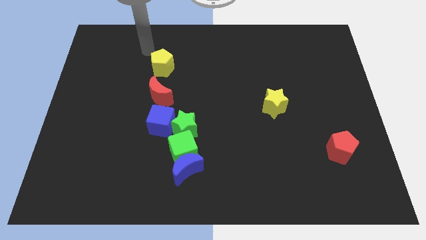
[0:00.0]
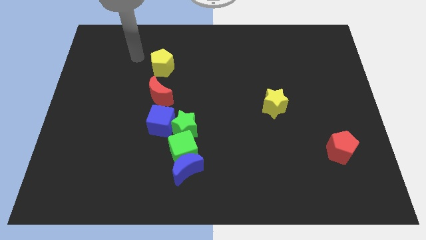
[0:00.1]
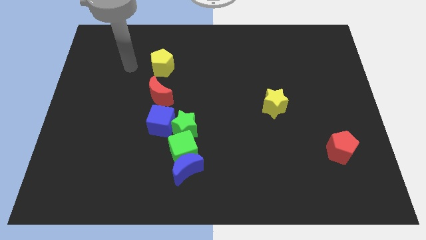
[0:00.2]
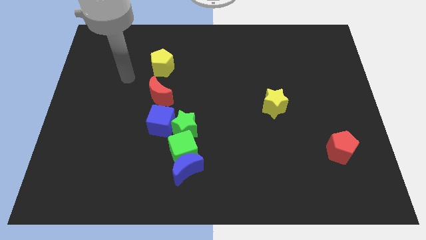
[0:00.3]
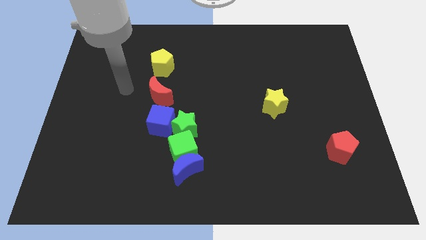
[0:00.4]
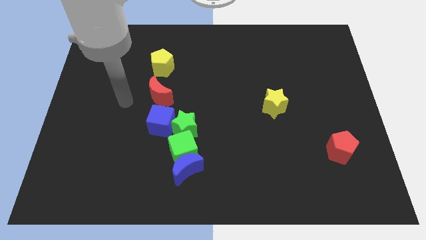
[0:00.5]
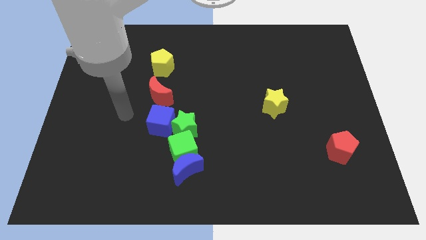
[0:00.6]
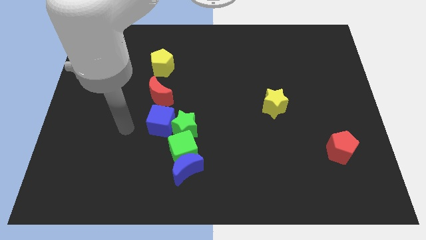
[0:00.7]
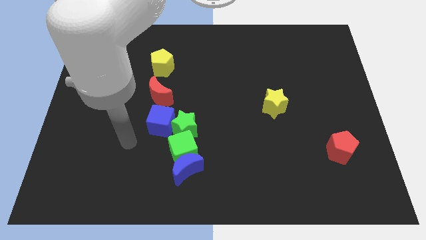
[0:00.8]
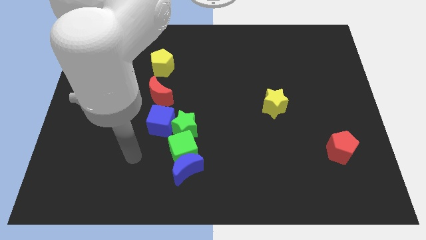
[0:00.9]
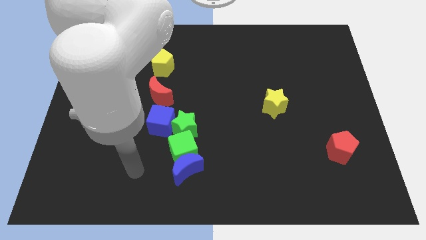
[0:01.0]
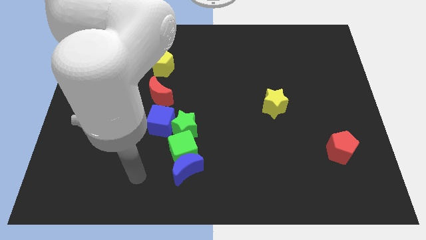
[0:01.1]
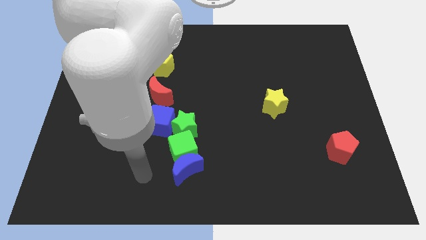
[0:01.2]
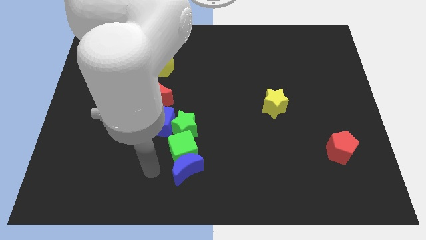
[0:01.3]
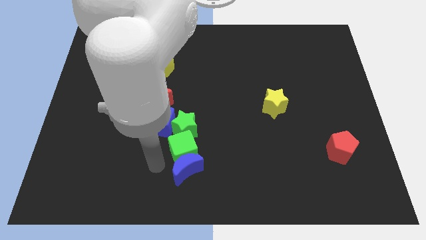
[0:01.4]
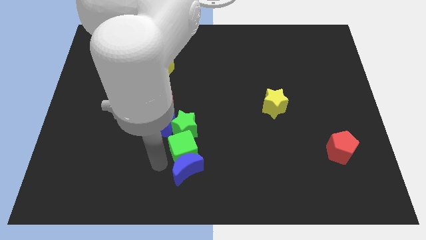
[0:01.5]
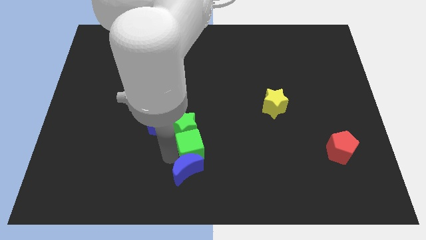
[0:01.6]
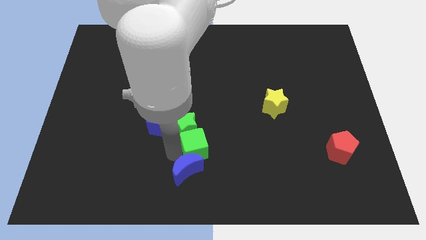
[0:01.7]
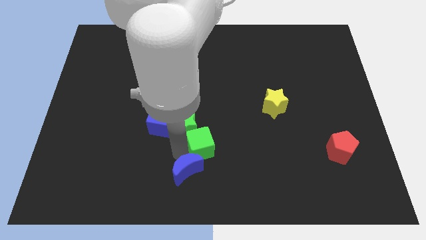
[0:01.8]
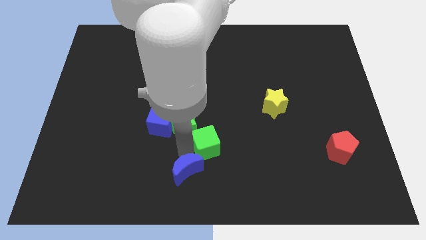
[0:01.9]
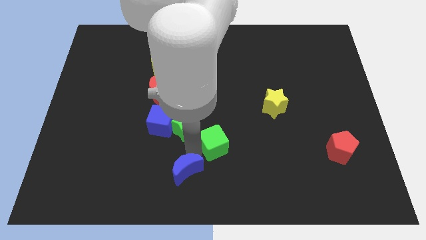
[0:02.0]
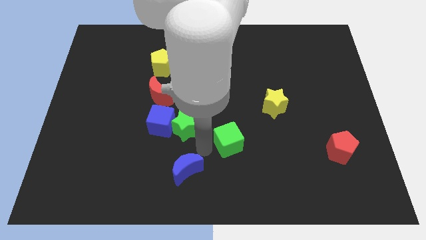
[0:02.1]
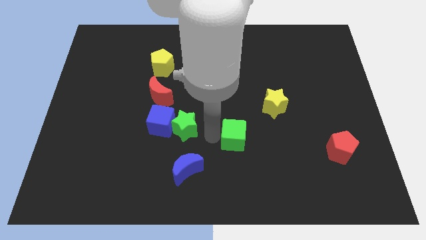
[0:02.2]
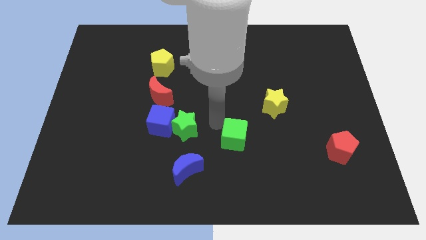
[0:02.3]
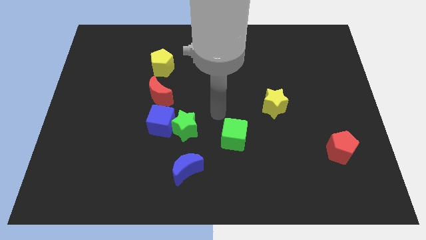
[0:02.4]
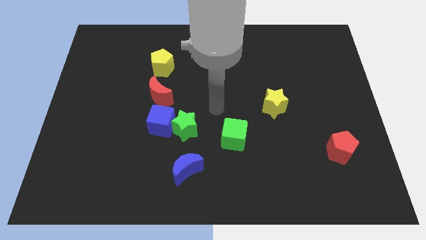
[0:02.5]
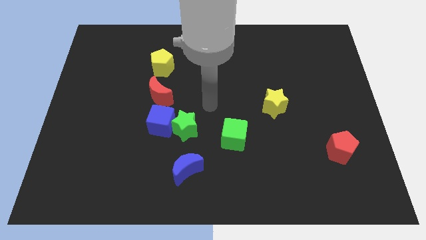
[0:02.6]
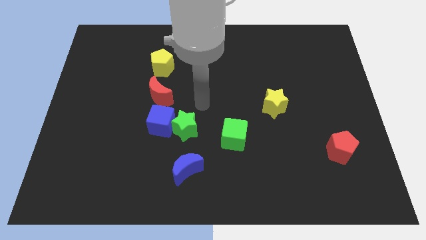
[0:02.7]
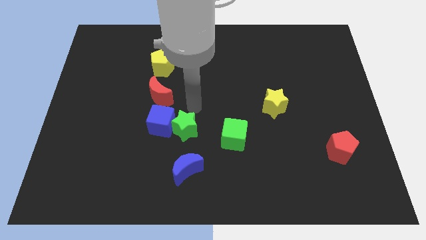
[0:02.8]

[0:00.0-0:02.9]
move the green cube slightly to the right

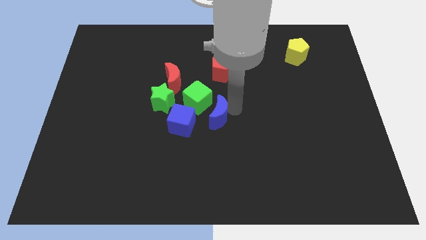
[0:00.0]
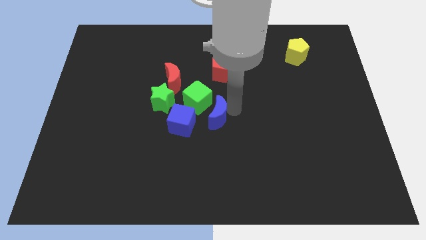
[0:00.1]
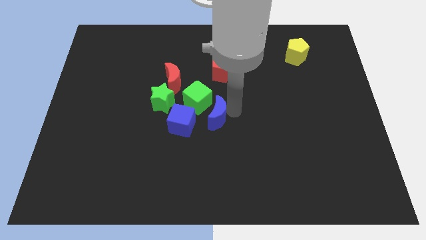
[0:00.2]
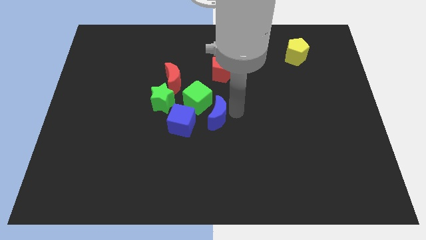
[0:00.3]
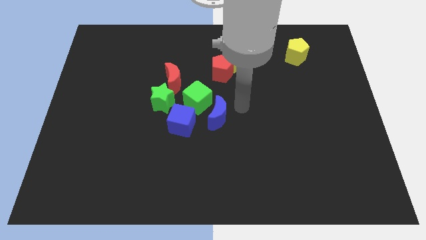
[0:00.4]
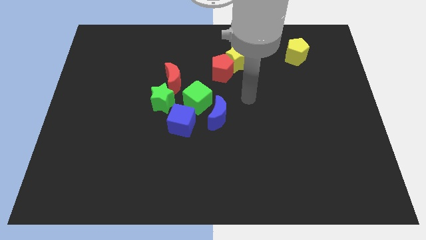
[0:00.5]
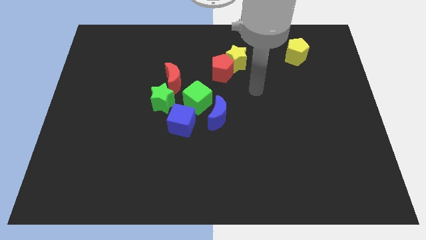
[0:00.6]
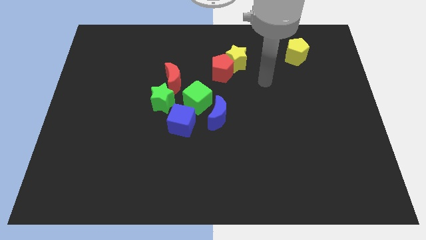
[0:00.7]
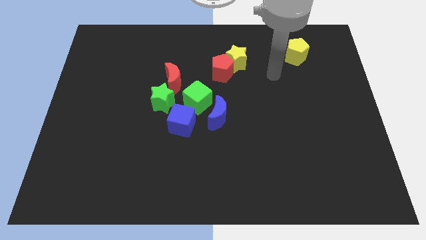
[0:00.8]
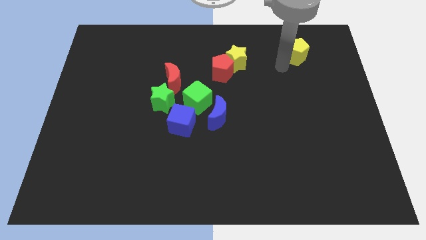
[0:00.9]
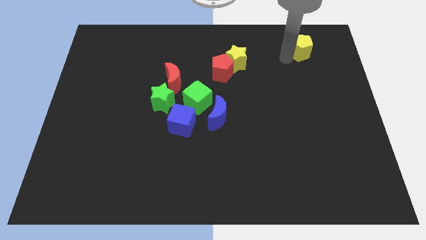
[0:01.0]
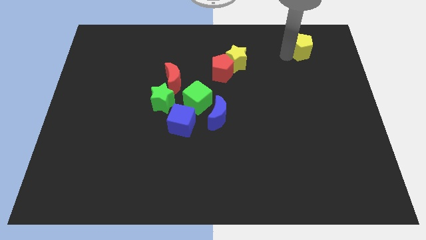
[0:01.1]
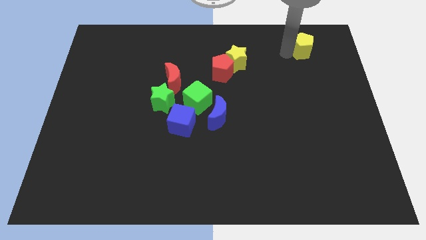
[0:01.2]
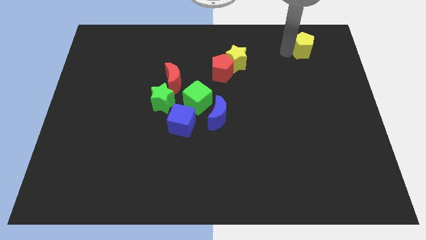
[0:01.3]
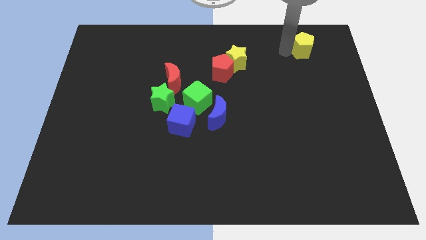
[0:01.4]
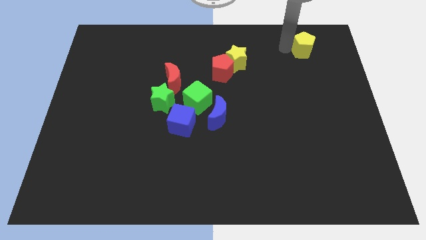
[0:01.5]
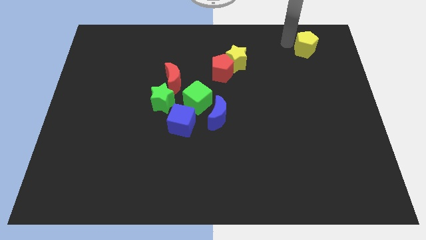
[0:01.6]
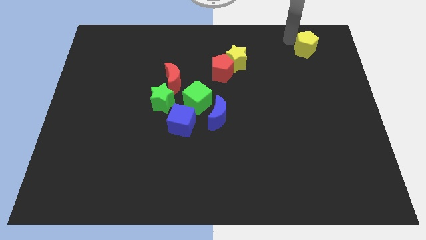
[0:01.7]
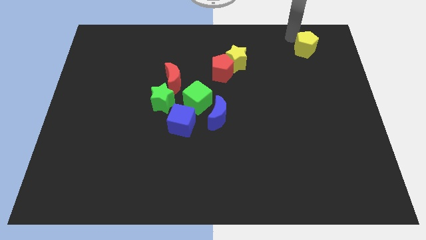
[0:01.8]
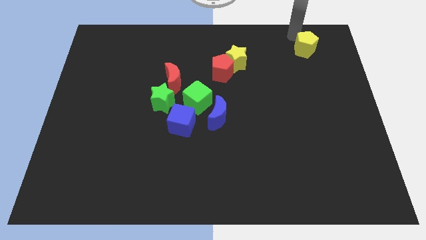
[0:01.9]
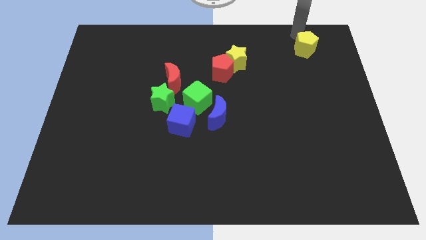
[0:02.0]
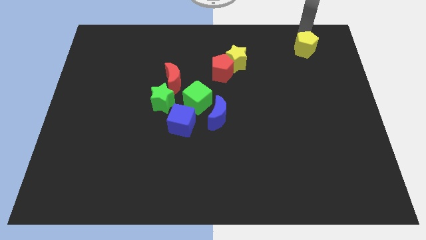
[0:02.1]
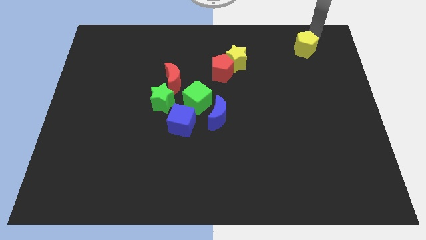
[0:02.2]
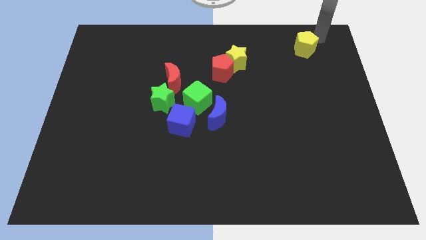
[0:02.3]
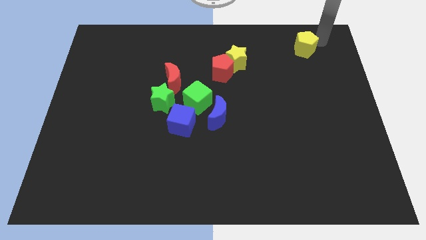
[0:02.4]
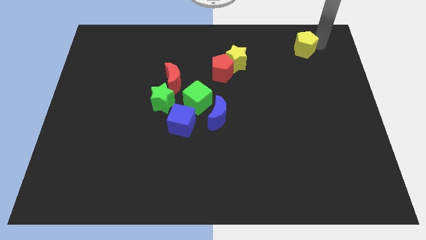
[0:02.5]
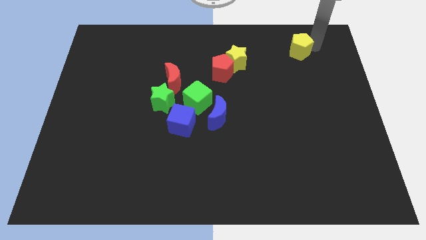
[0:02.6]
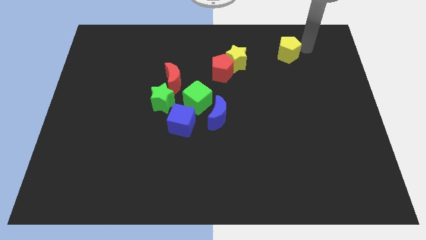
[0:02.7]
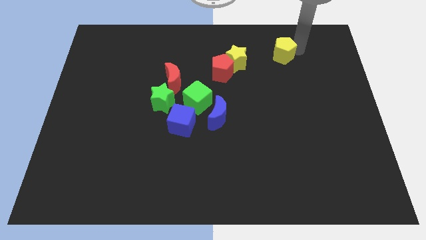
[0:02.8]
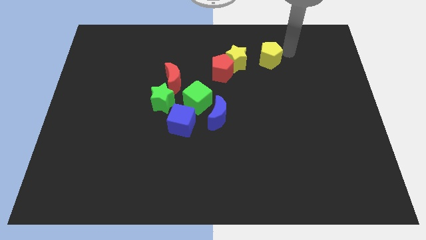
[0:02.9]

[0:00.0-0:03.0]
push the yellow pentagon towards the yellow star

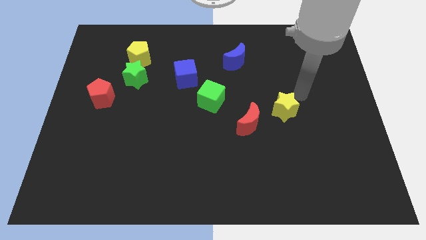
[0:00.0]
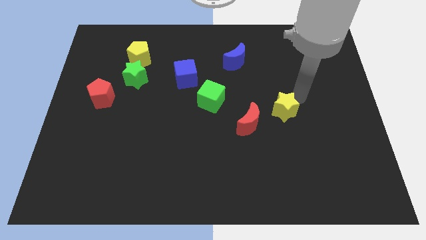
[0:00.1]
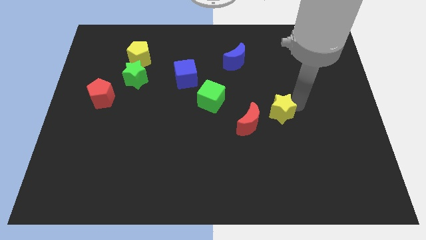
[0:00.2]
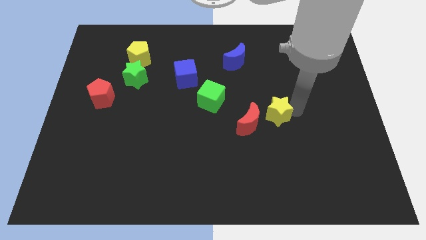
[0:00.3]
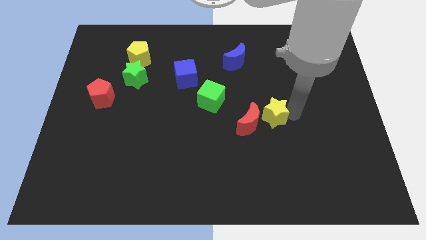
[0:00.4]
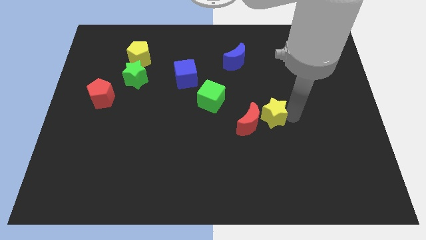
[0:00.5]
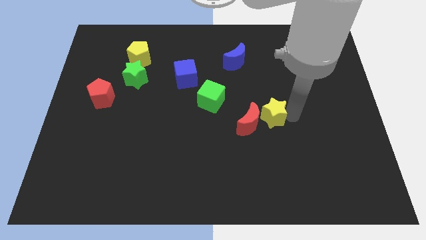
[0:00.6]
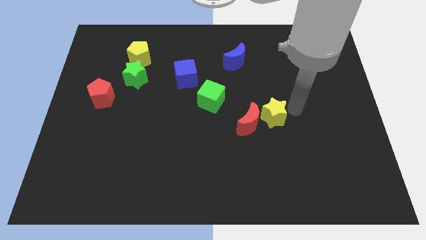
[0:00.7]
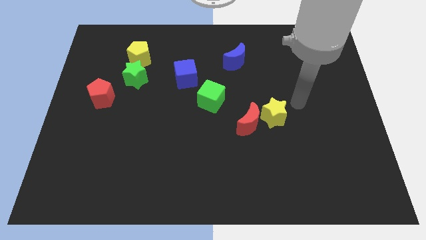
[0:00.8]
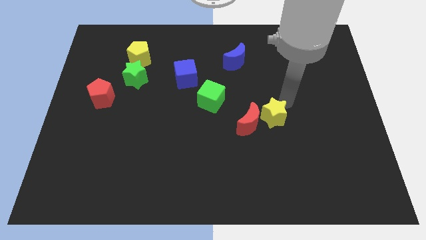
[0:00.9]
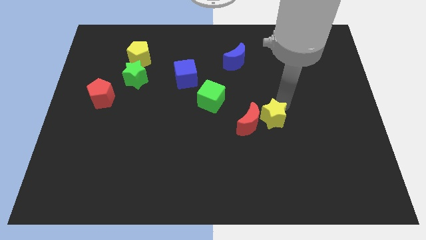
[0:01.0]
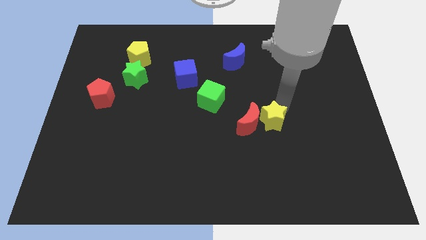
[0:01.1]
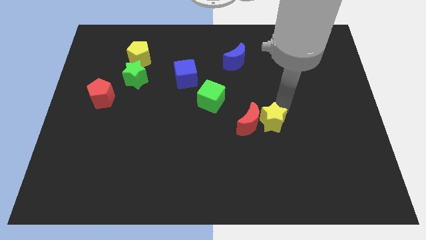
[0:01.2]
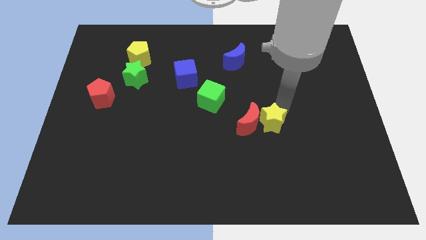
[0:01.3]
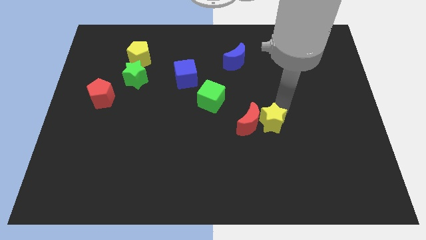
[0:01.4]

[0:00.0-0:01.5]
slide the yellow star close to the right side of the red moon

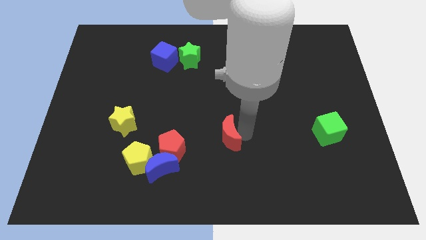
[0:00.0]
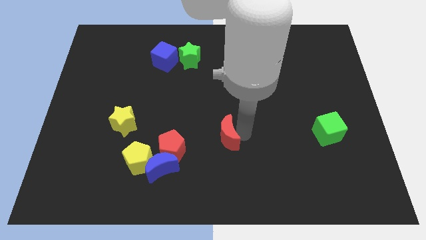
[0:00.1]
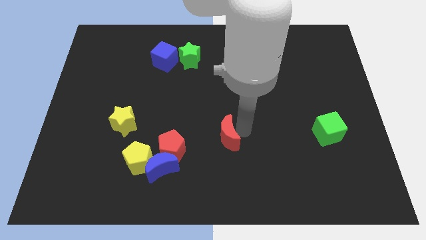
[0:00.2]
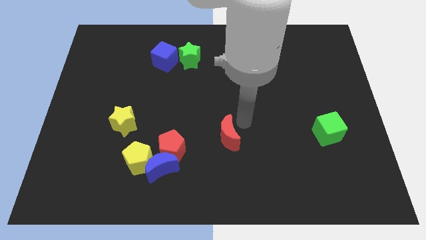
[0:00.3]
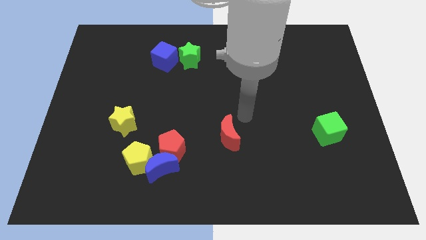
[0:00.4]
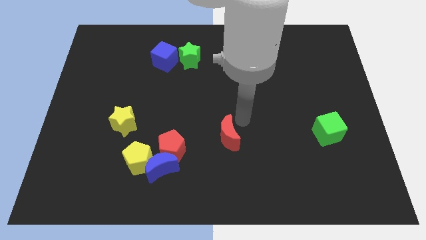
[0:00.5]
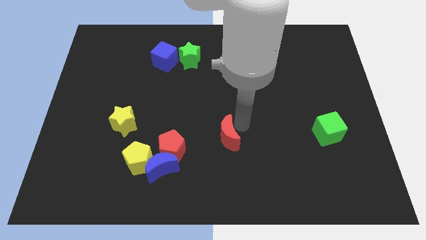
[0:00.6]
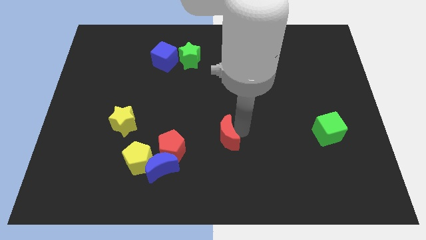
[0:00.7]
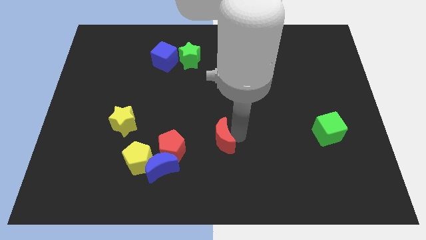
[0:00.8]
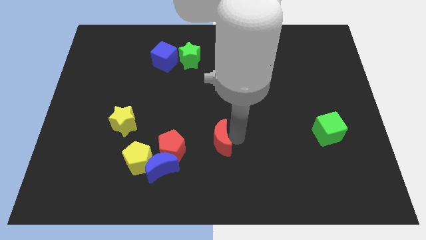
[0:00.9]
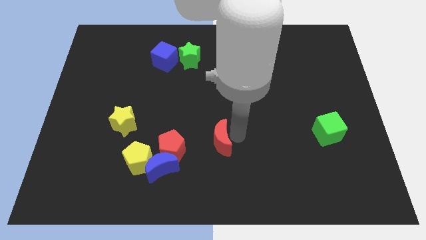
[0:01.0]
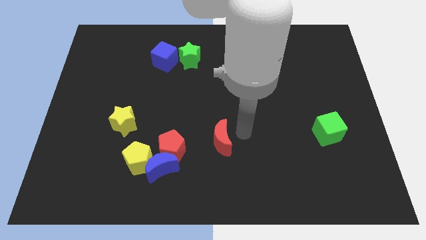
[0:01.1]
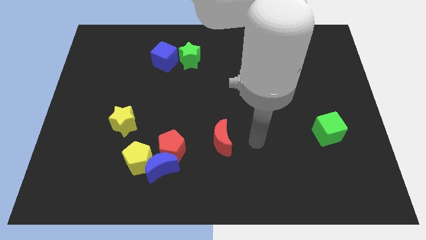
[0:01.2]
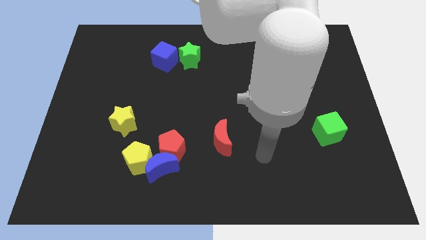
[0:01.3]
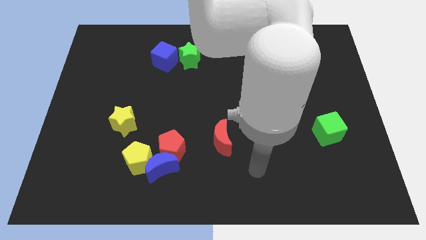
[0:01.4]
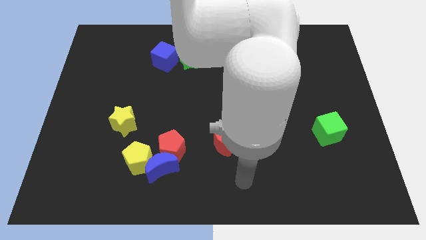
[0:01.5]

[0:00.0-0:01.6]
place the red moon to the right side of red pentagon
